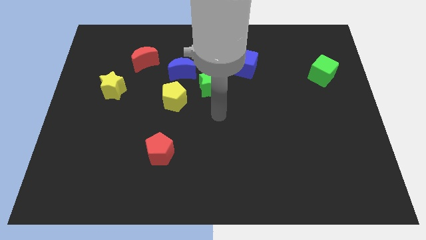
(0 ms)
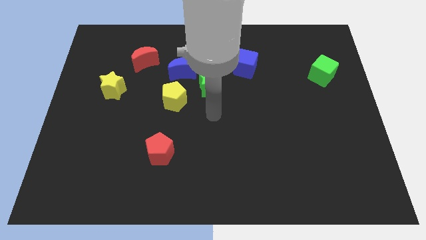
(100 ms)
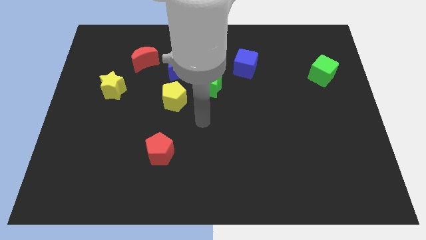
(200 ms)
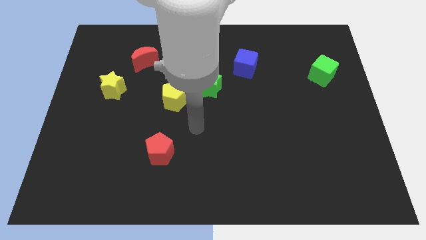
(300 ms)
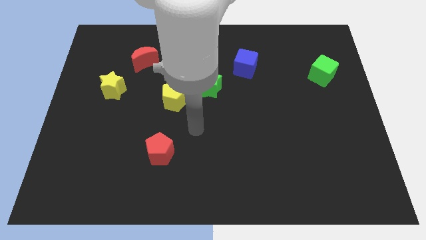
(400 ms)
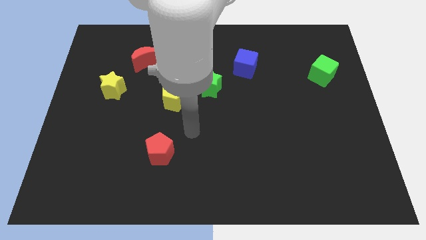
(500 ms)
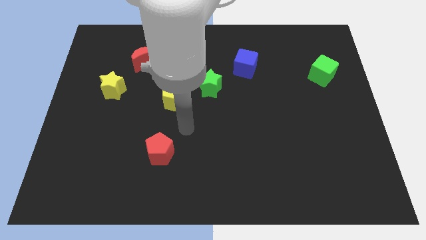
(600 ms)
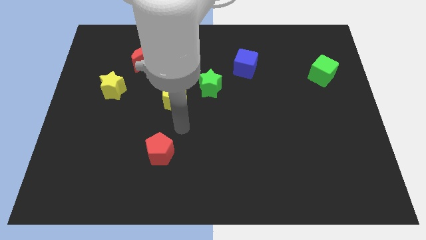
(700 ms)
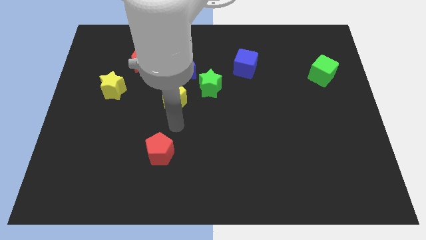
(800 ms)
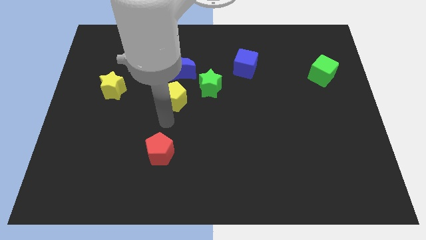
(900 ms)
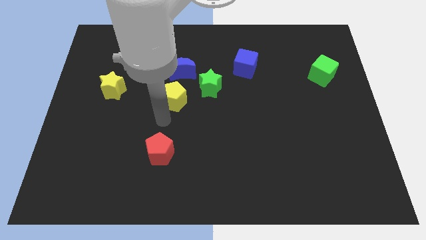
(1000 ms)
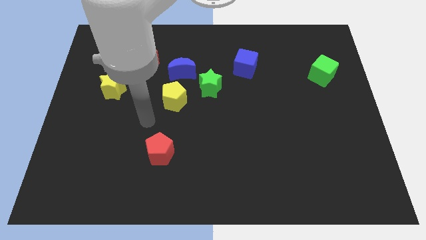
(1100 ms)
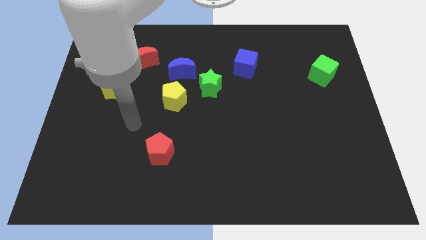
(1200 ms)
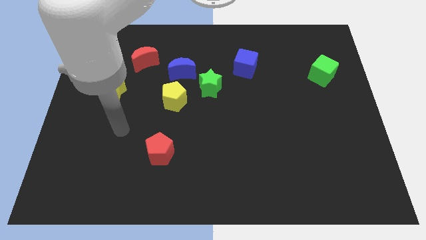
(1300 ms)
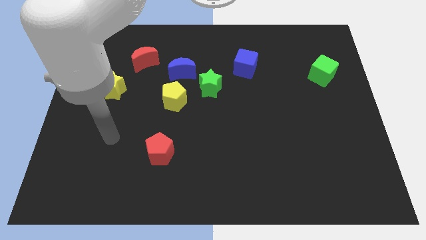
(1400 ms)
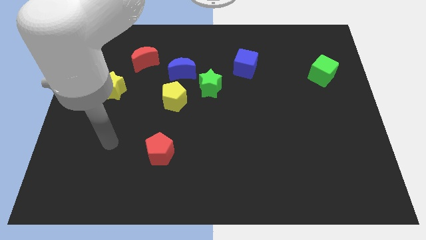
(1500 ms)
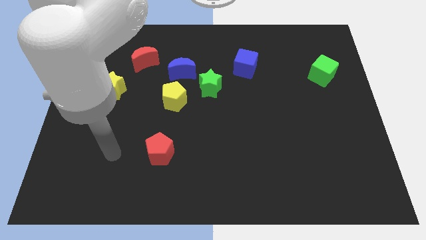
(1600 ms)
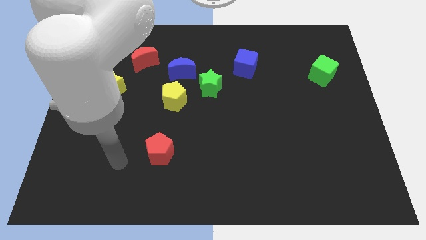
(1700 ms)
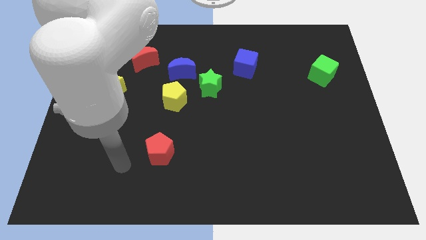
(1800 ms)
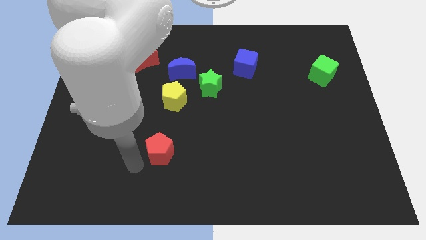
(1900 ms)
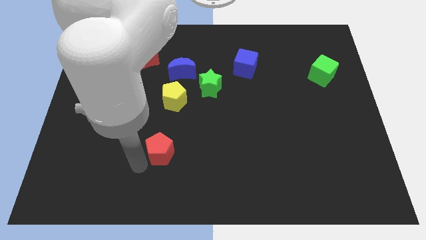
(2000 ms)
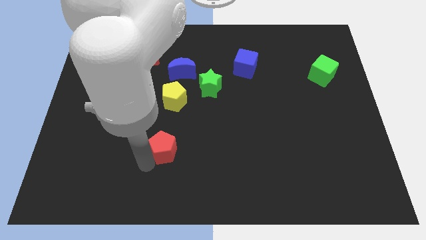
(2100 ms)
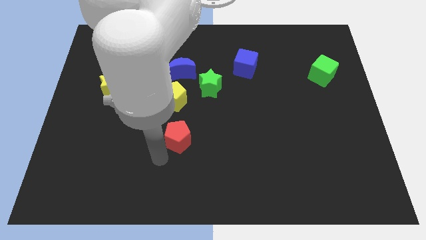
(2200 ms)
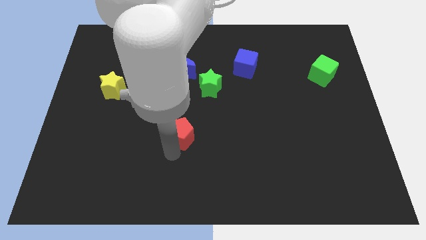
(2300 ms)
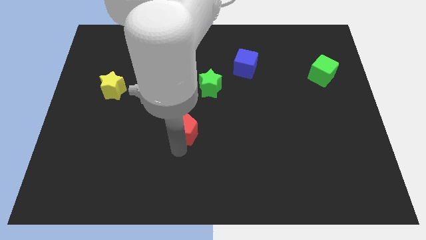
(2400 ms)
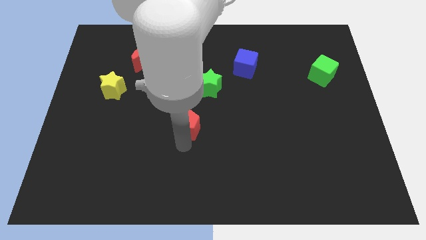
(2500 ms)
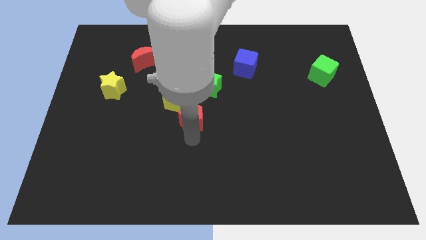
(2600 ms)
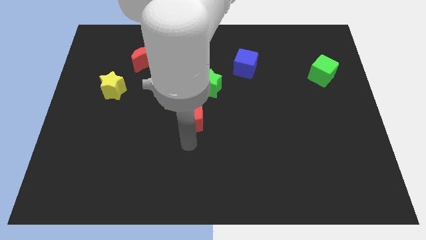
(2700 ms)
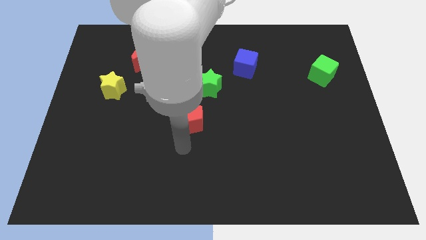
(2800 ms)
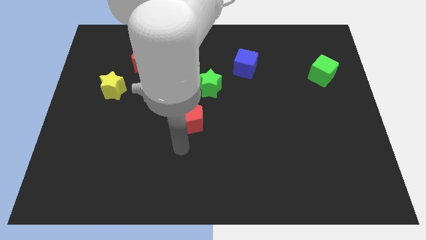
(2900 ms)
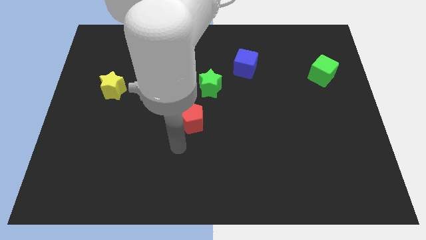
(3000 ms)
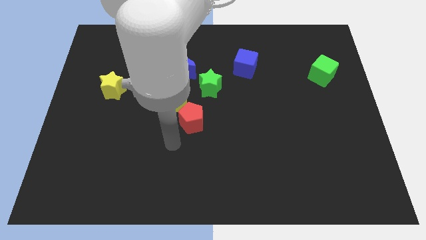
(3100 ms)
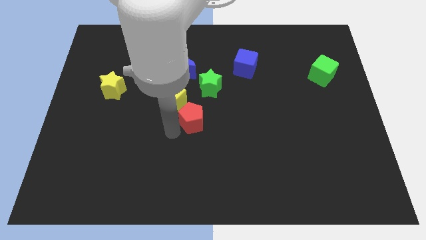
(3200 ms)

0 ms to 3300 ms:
slightly push the red pentagon upwards

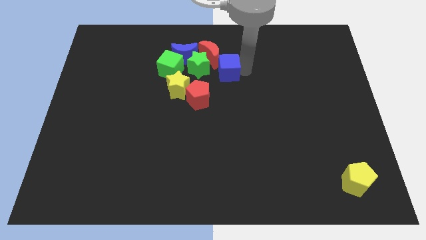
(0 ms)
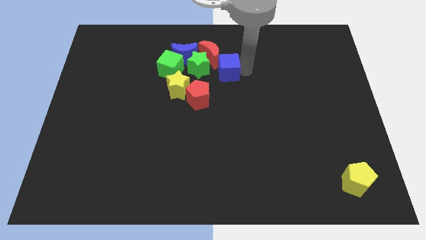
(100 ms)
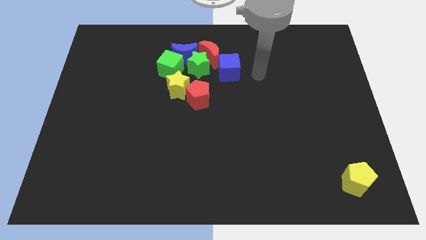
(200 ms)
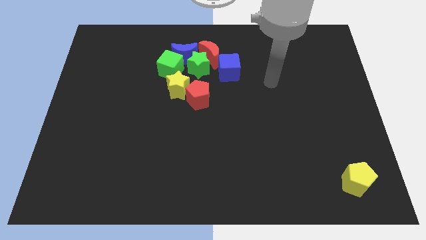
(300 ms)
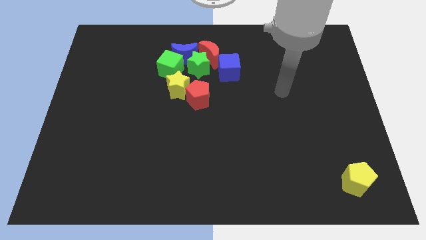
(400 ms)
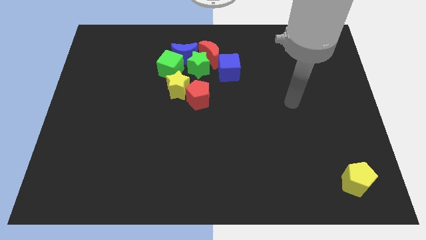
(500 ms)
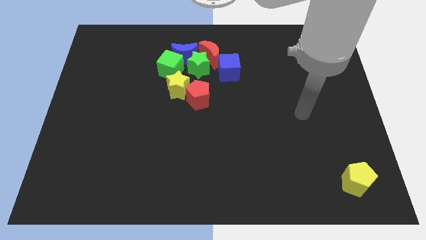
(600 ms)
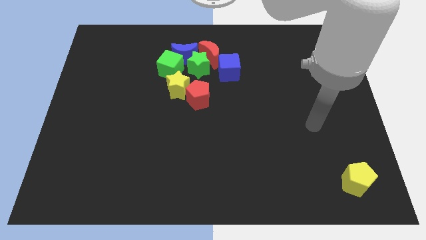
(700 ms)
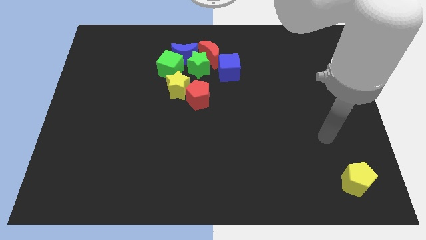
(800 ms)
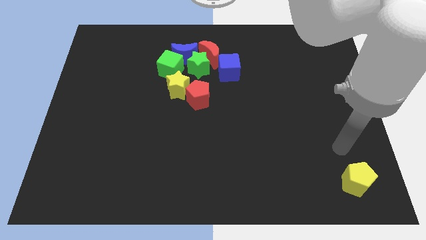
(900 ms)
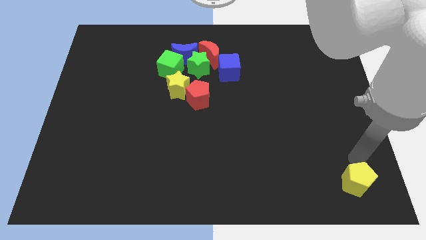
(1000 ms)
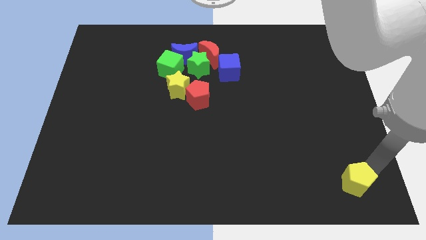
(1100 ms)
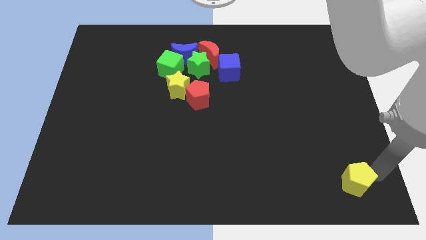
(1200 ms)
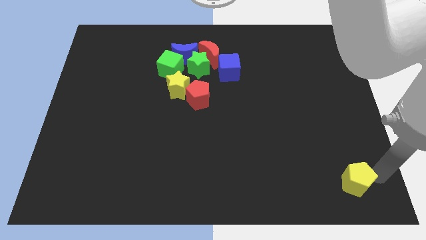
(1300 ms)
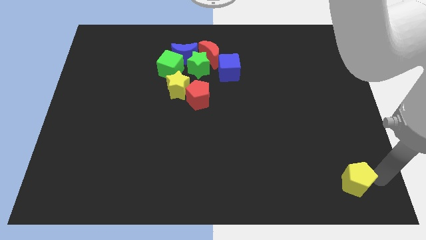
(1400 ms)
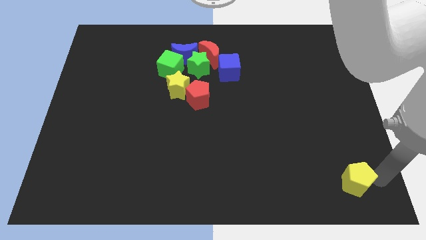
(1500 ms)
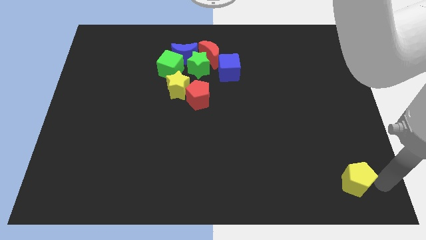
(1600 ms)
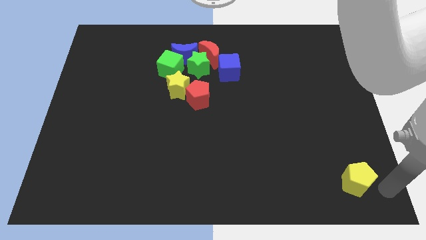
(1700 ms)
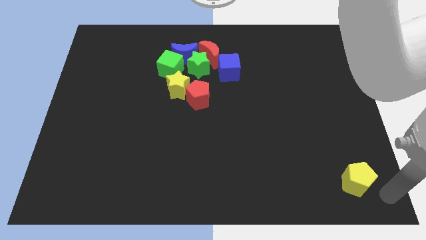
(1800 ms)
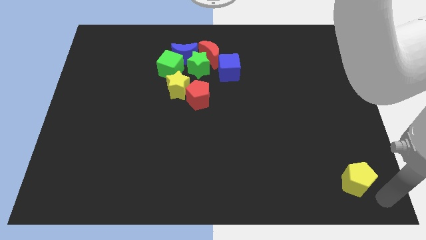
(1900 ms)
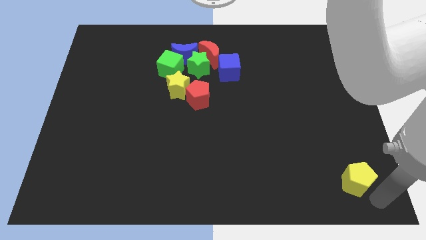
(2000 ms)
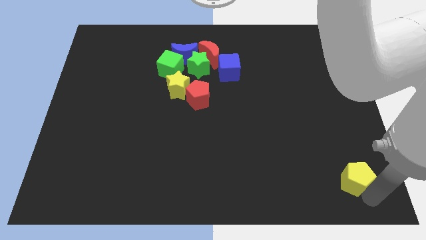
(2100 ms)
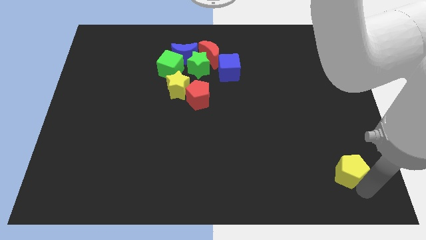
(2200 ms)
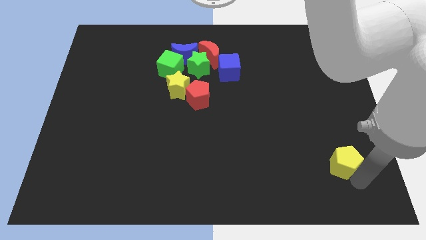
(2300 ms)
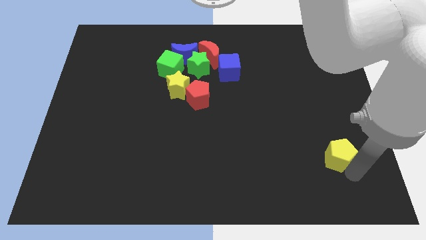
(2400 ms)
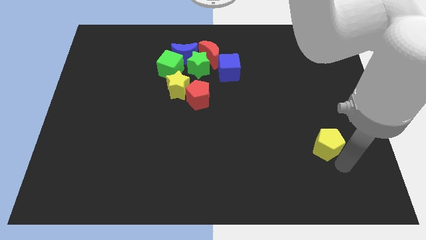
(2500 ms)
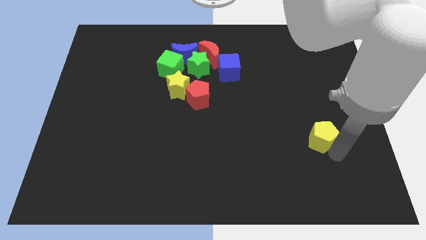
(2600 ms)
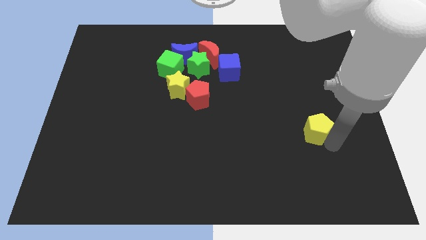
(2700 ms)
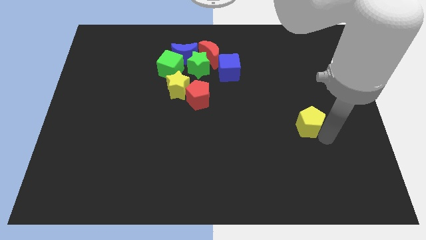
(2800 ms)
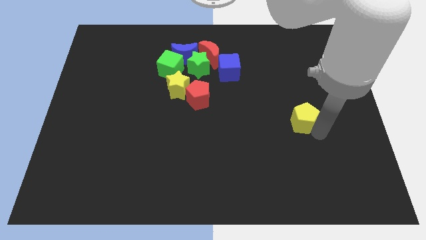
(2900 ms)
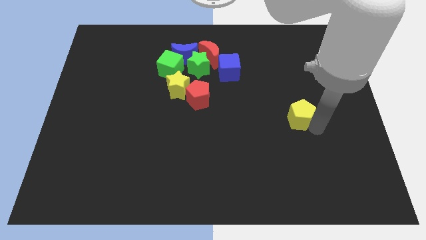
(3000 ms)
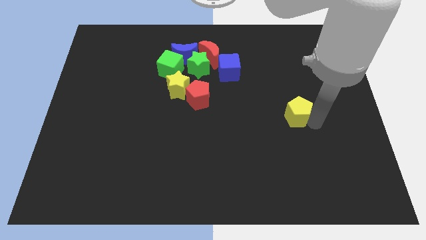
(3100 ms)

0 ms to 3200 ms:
push the yellow pentagon towards the center of the board

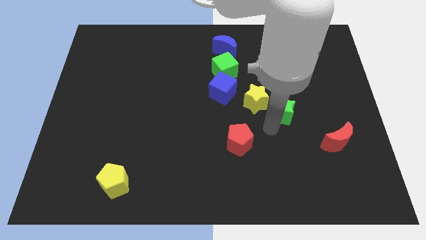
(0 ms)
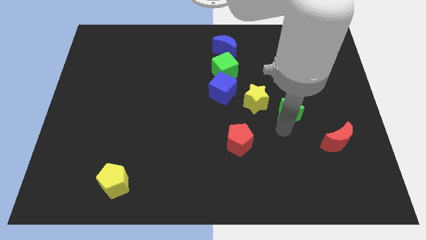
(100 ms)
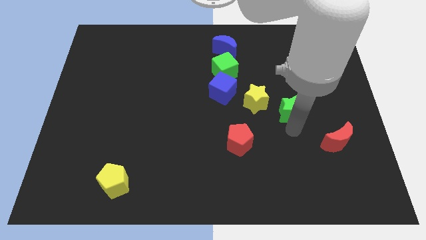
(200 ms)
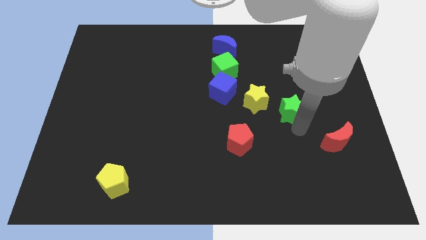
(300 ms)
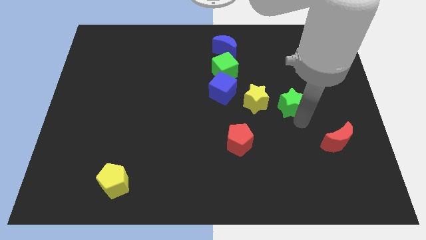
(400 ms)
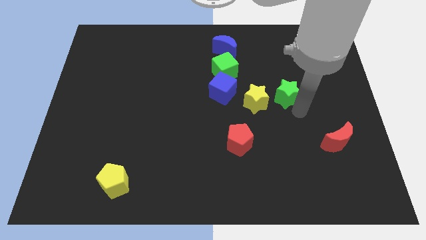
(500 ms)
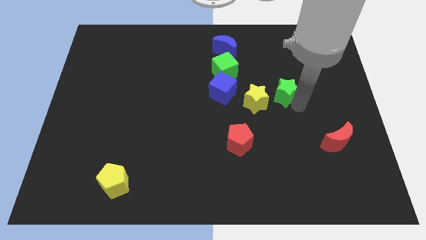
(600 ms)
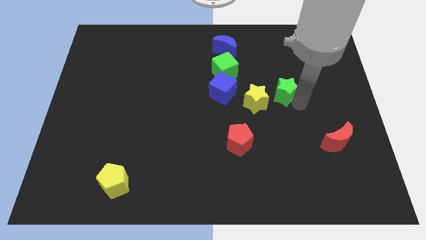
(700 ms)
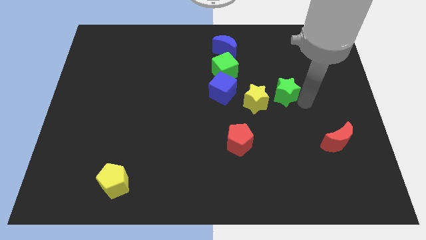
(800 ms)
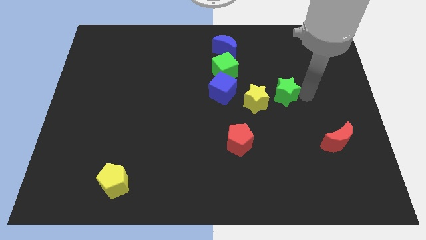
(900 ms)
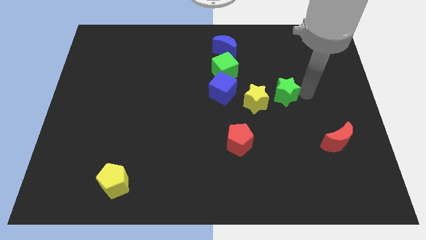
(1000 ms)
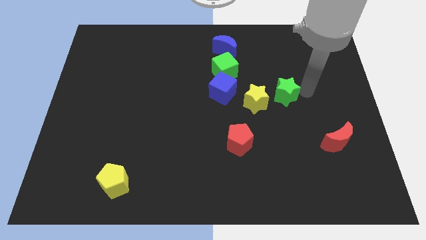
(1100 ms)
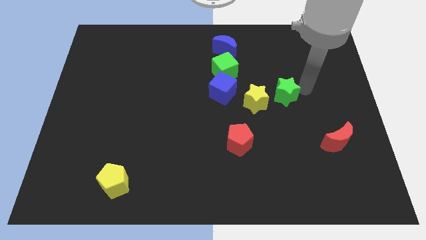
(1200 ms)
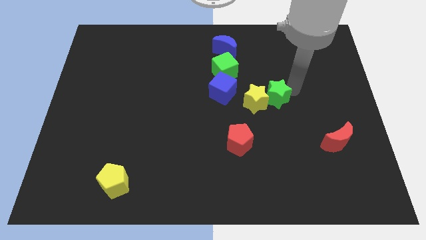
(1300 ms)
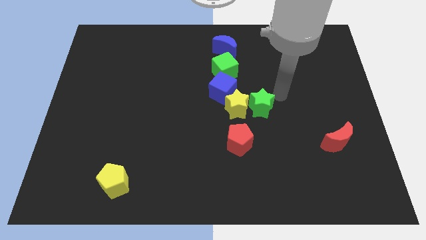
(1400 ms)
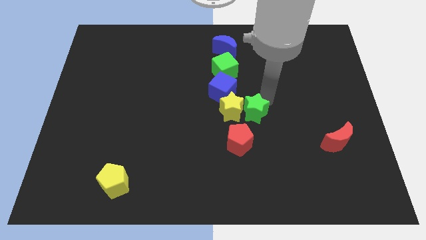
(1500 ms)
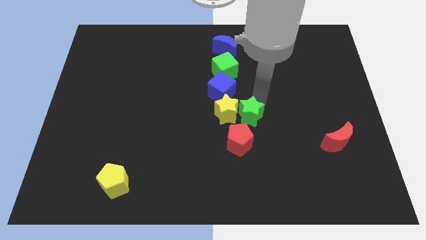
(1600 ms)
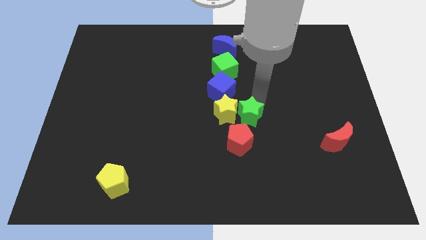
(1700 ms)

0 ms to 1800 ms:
slide the green star and yellow star in between the red pentagon and blue cube

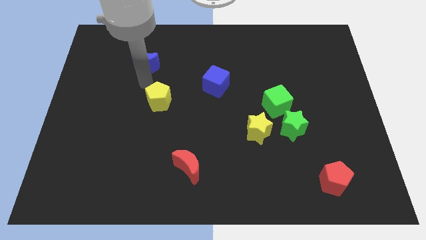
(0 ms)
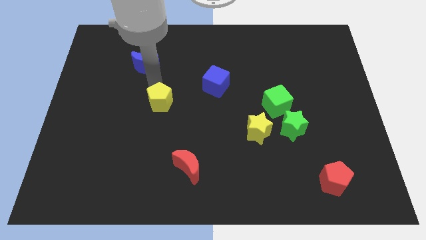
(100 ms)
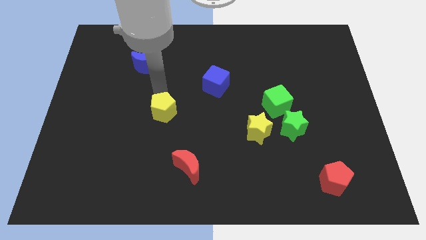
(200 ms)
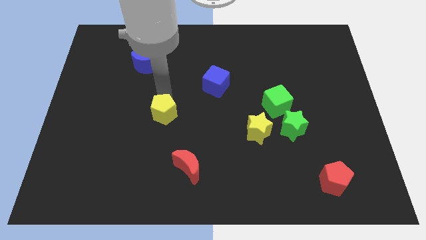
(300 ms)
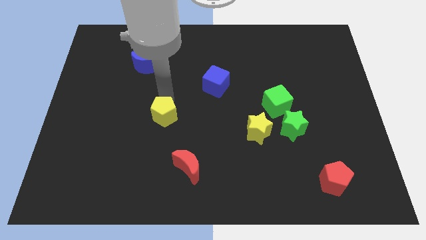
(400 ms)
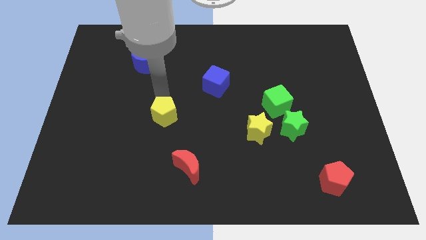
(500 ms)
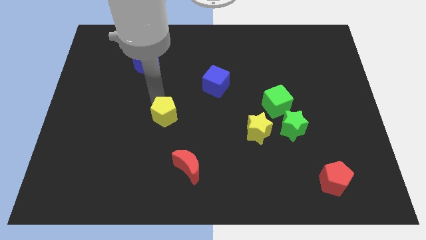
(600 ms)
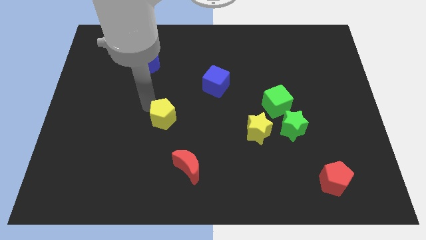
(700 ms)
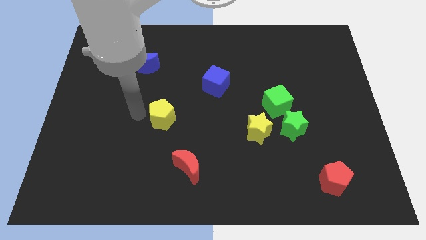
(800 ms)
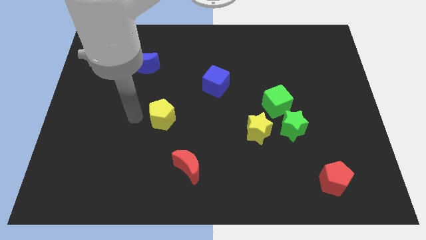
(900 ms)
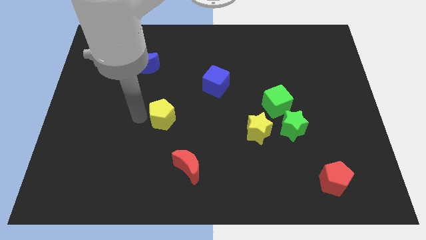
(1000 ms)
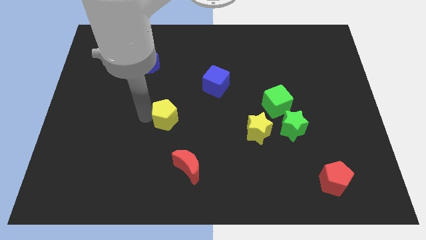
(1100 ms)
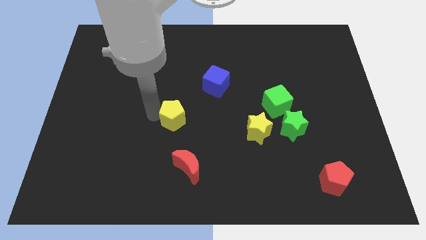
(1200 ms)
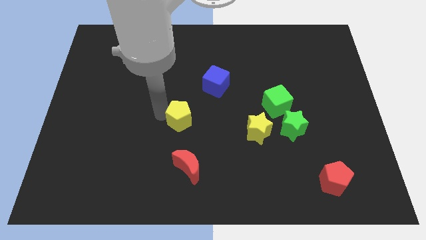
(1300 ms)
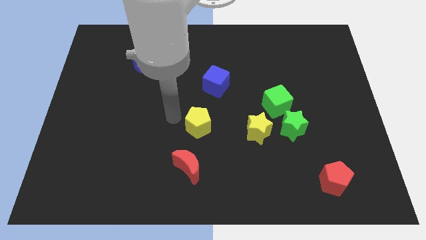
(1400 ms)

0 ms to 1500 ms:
put the yellow pentagon in between the blue cube and red crescent
